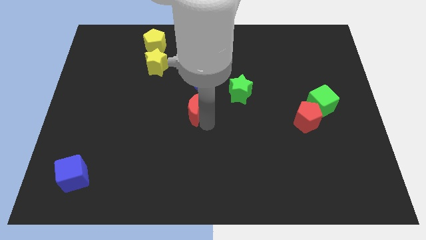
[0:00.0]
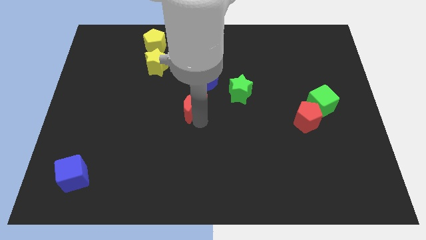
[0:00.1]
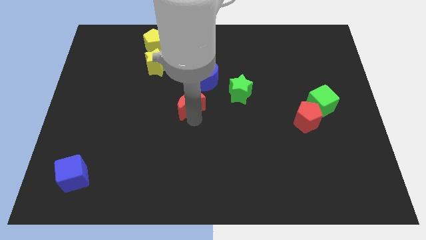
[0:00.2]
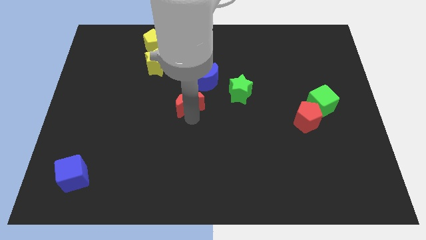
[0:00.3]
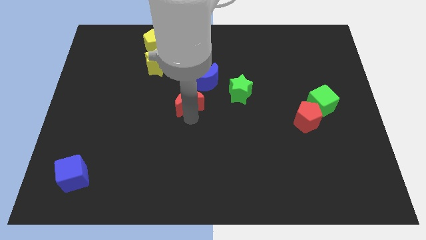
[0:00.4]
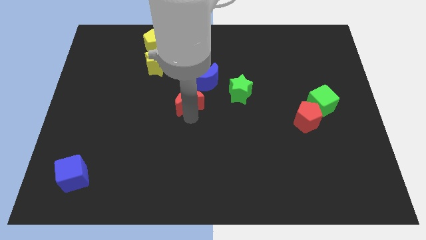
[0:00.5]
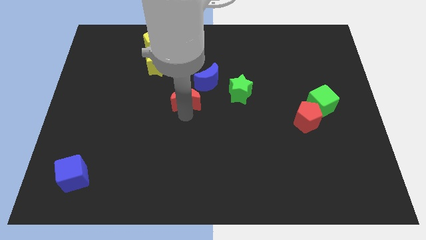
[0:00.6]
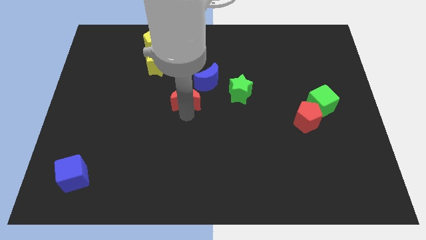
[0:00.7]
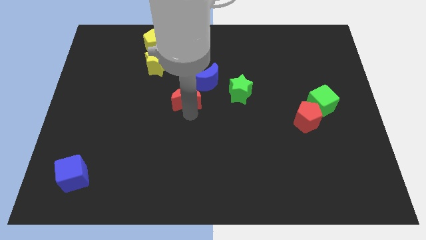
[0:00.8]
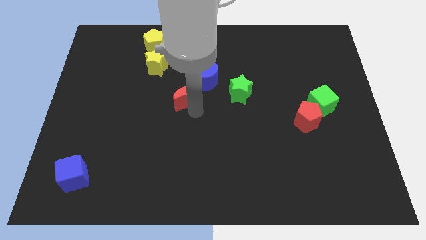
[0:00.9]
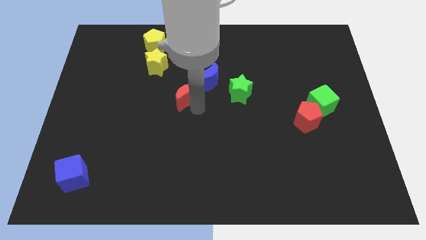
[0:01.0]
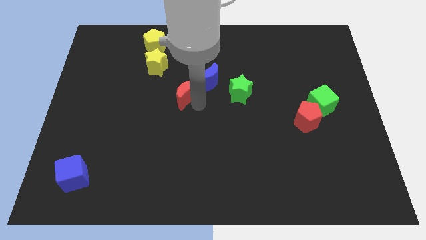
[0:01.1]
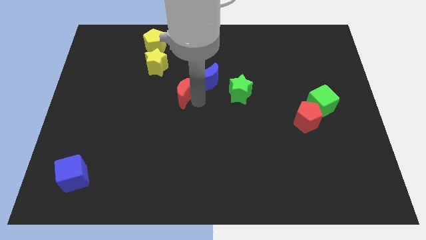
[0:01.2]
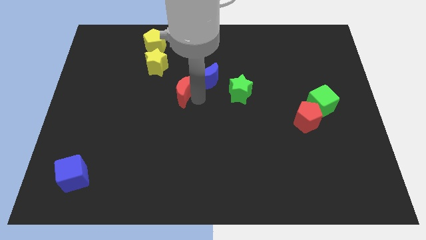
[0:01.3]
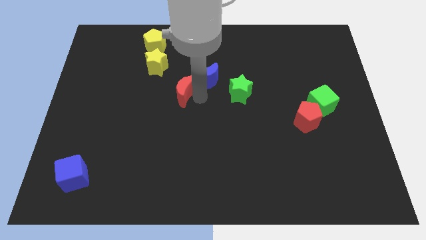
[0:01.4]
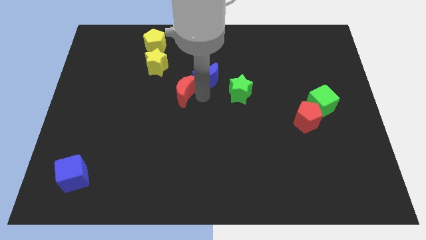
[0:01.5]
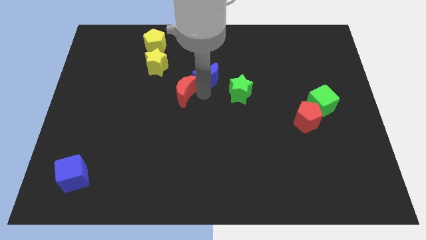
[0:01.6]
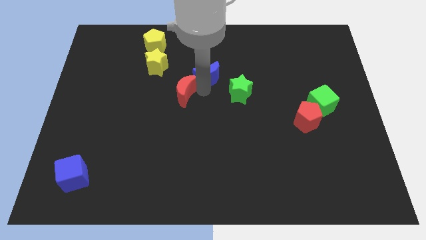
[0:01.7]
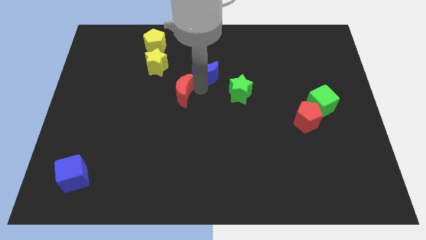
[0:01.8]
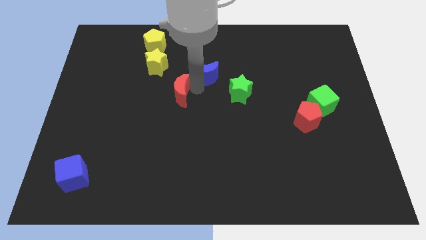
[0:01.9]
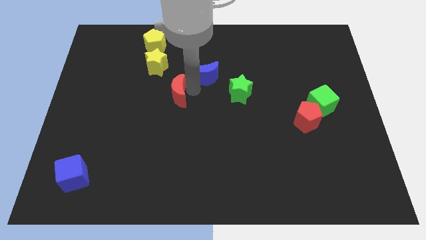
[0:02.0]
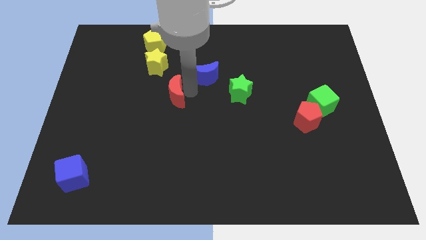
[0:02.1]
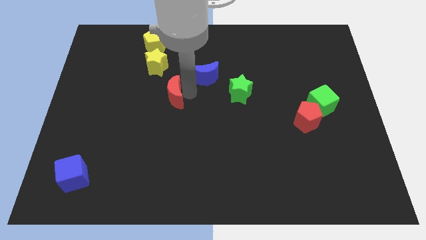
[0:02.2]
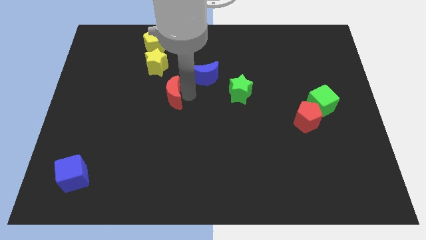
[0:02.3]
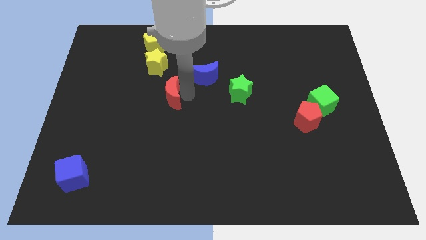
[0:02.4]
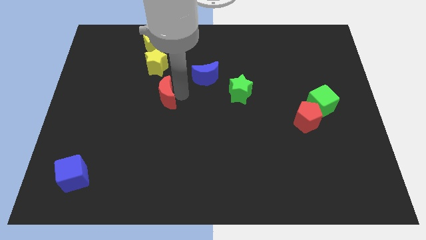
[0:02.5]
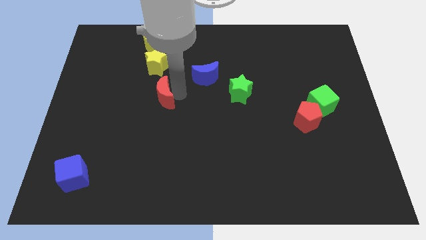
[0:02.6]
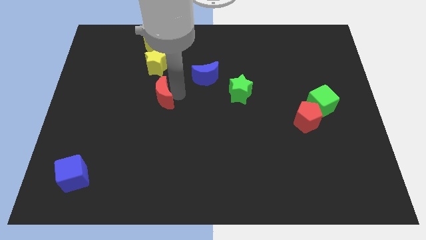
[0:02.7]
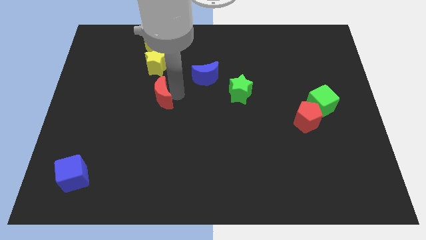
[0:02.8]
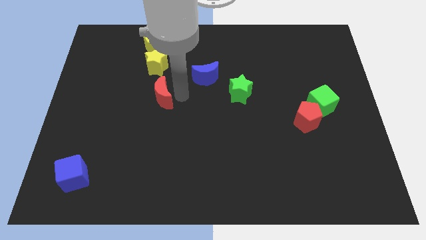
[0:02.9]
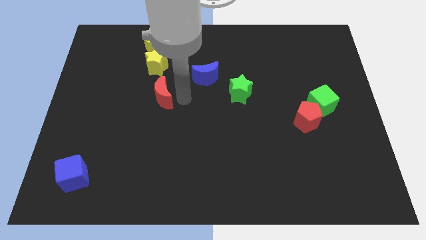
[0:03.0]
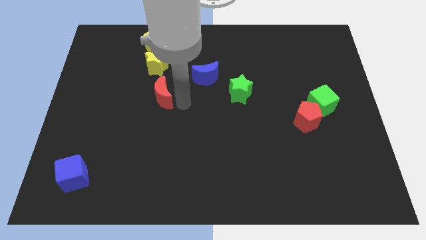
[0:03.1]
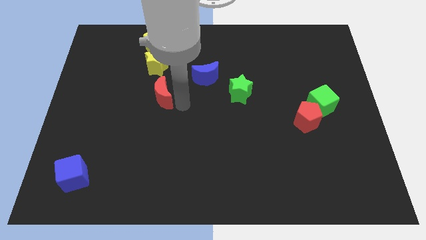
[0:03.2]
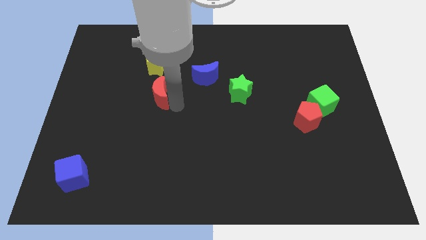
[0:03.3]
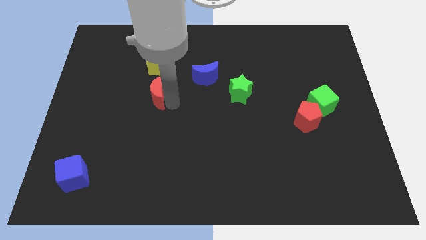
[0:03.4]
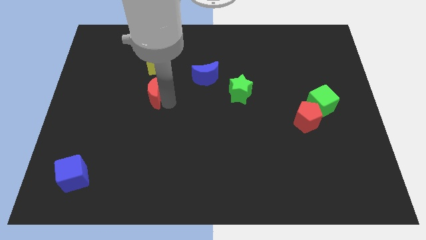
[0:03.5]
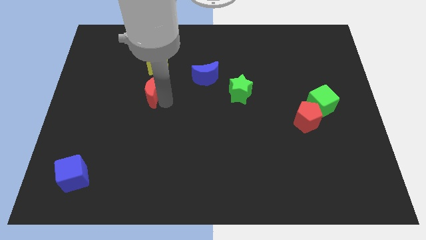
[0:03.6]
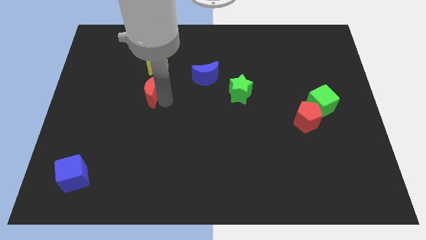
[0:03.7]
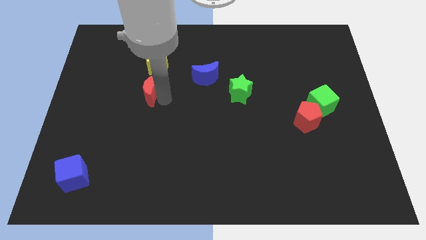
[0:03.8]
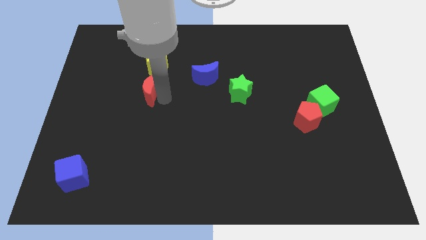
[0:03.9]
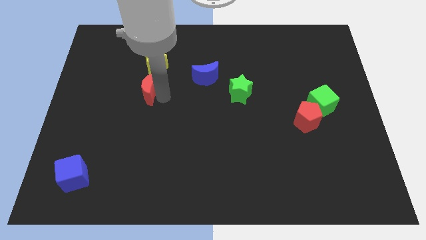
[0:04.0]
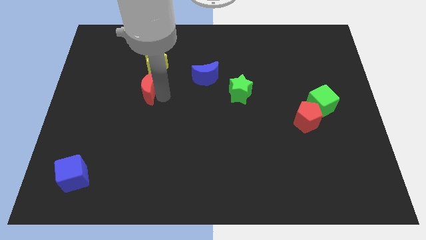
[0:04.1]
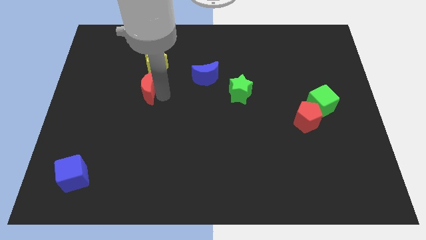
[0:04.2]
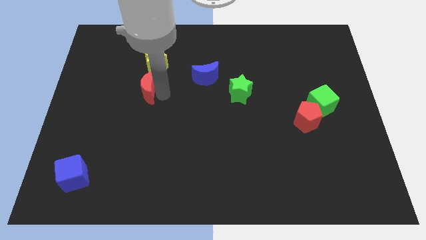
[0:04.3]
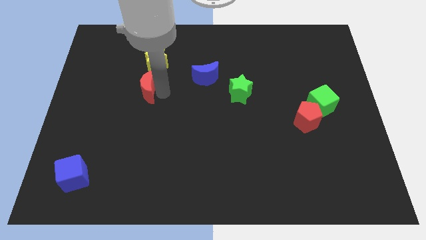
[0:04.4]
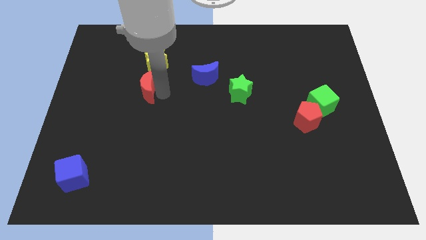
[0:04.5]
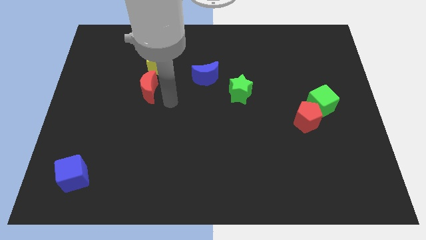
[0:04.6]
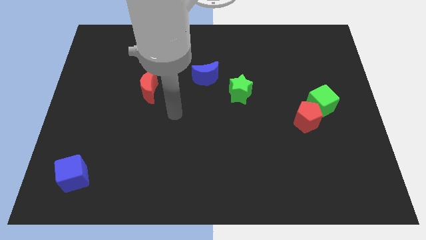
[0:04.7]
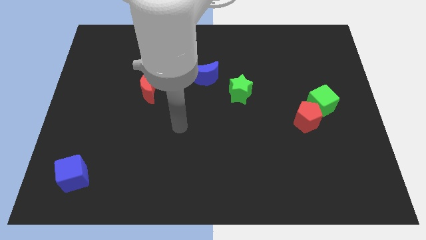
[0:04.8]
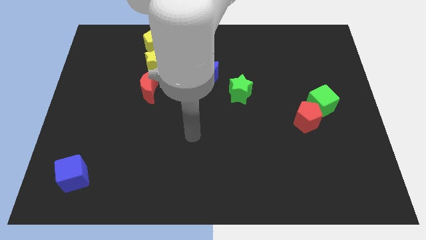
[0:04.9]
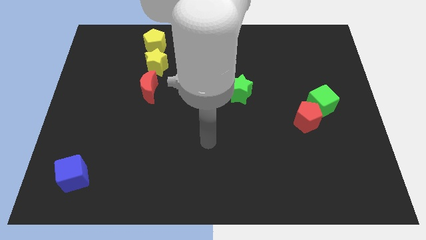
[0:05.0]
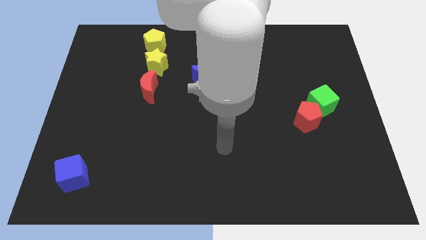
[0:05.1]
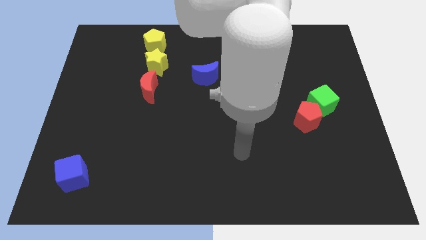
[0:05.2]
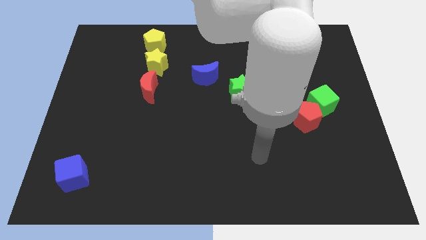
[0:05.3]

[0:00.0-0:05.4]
move the red crescent below the yellow star

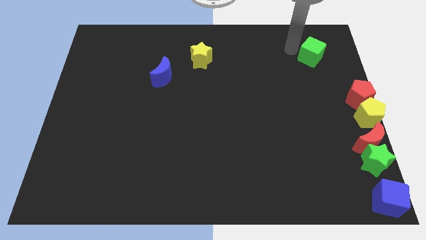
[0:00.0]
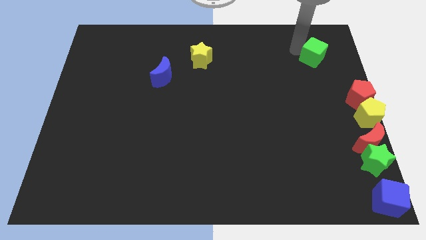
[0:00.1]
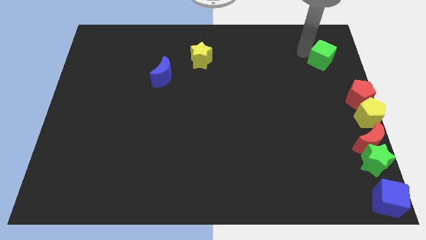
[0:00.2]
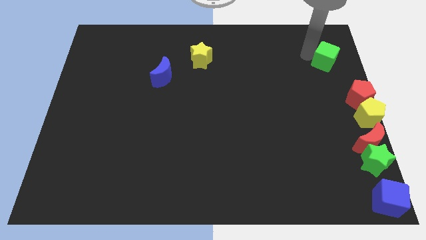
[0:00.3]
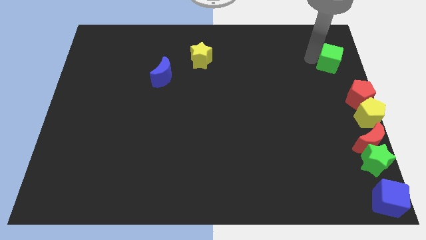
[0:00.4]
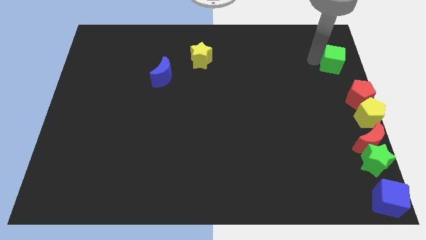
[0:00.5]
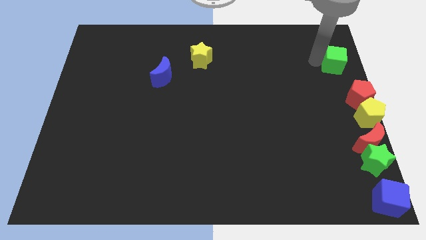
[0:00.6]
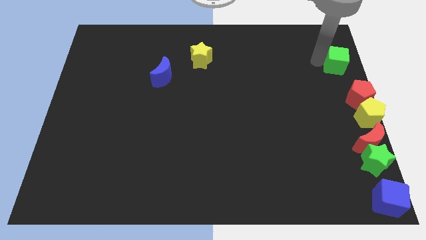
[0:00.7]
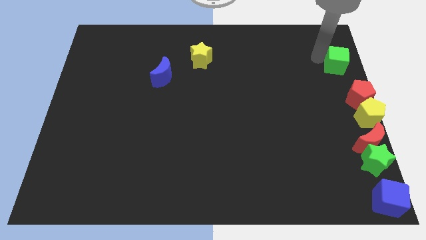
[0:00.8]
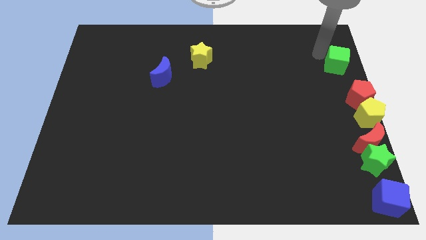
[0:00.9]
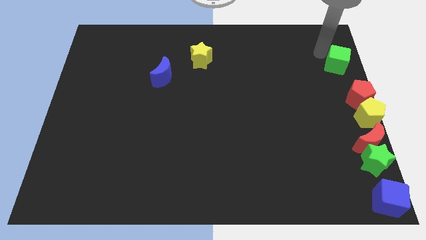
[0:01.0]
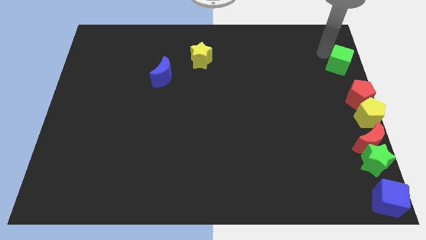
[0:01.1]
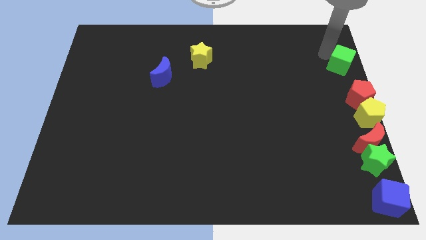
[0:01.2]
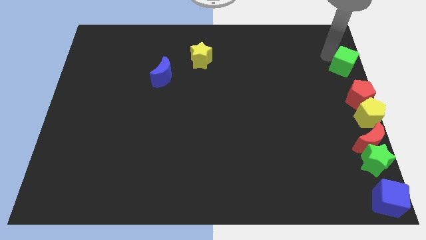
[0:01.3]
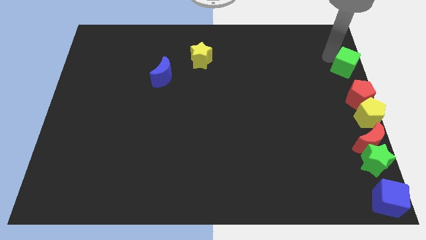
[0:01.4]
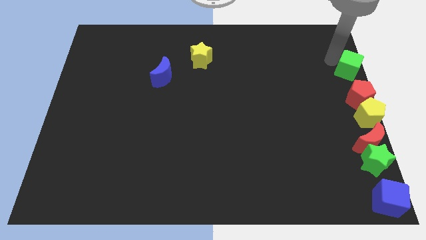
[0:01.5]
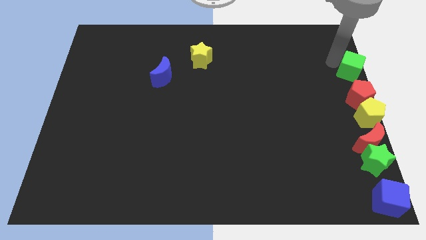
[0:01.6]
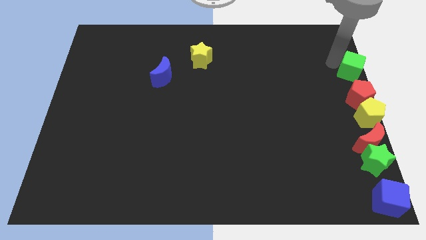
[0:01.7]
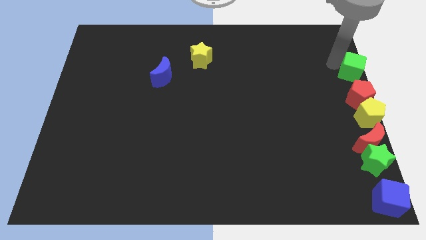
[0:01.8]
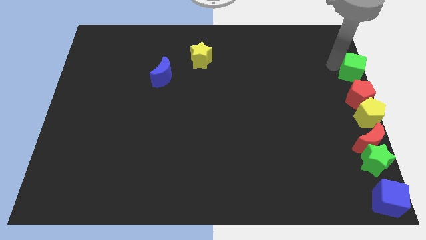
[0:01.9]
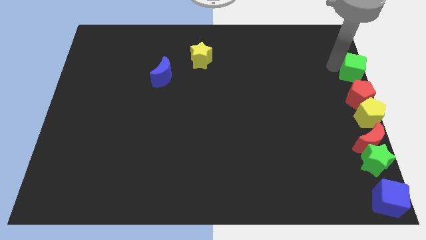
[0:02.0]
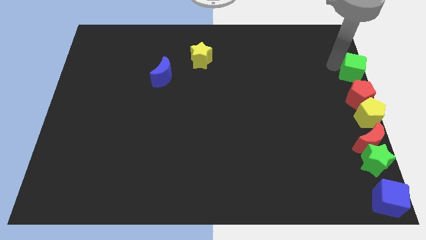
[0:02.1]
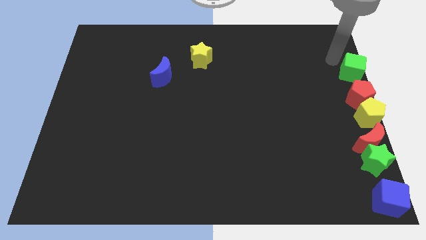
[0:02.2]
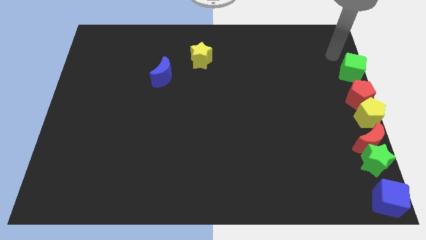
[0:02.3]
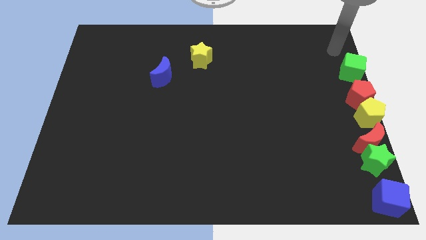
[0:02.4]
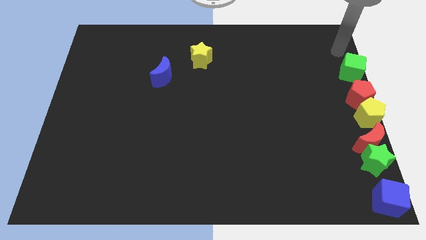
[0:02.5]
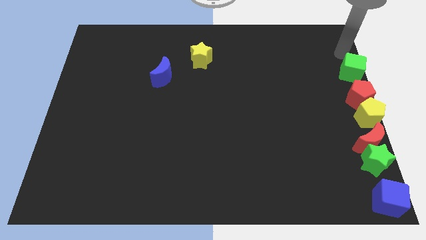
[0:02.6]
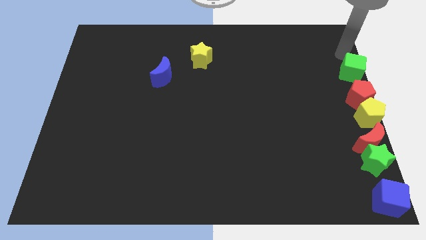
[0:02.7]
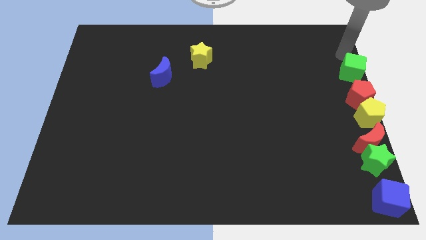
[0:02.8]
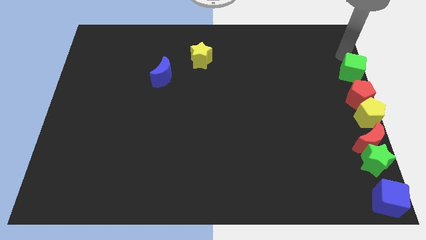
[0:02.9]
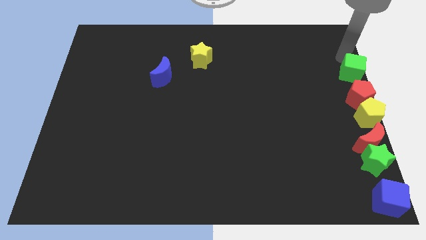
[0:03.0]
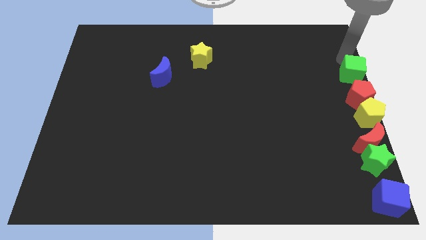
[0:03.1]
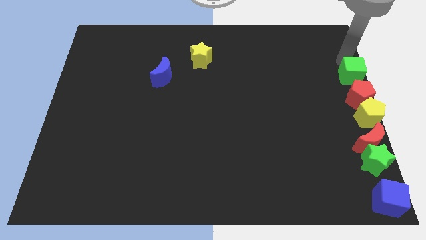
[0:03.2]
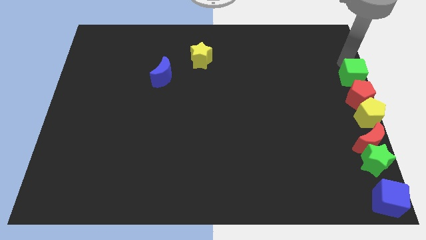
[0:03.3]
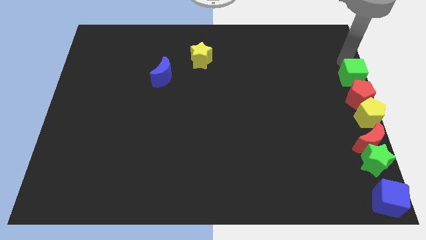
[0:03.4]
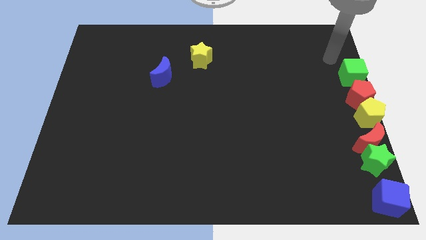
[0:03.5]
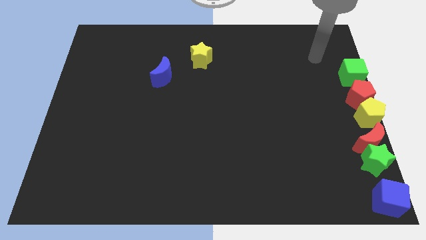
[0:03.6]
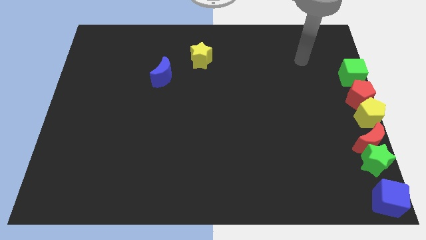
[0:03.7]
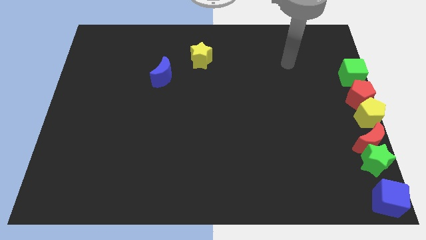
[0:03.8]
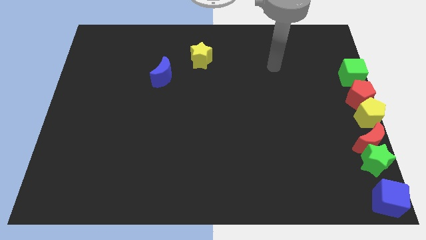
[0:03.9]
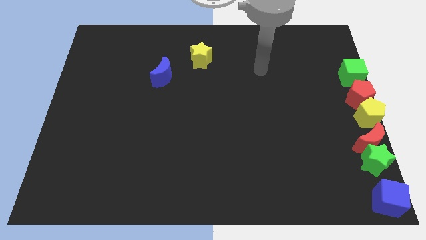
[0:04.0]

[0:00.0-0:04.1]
move green cube above red pentagon
